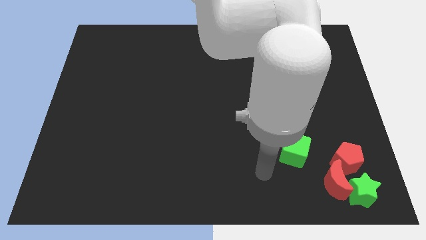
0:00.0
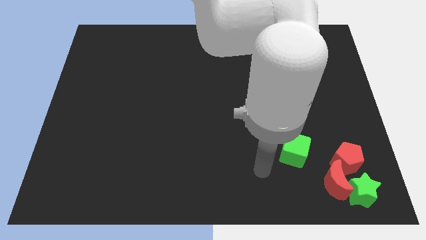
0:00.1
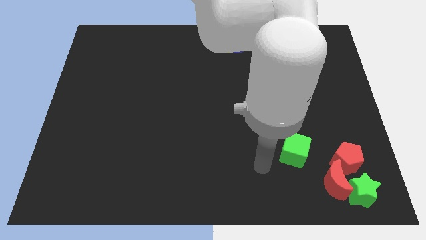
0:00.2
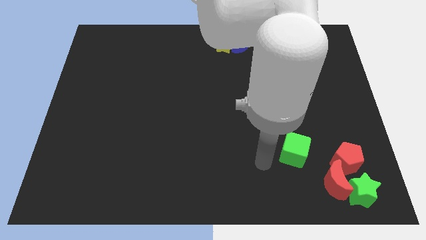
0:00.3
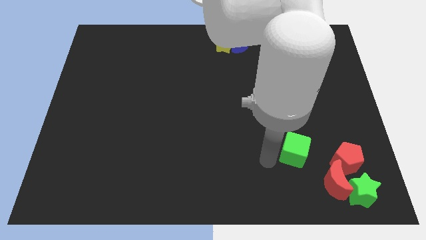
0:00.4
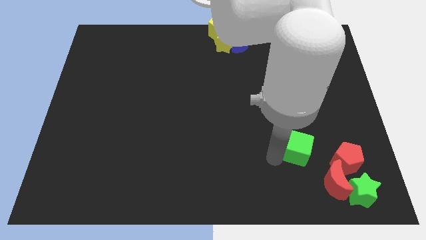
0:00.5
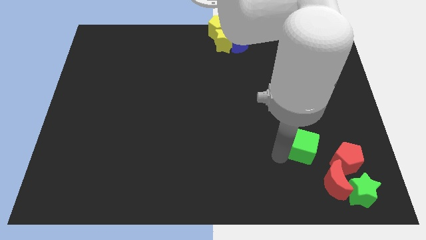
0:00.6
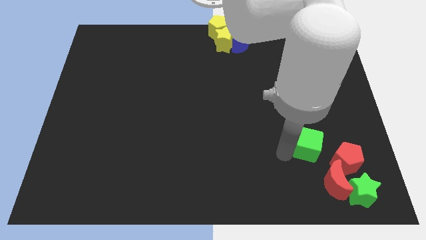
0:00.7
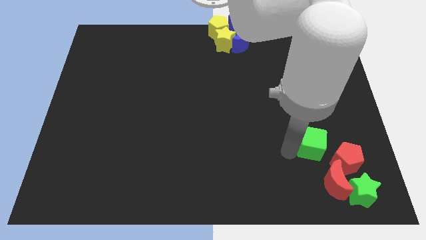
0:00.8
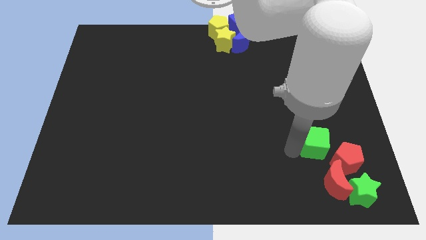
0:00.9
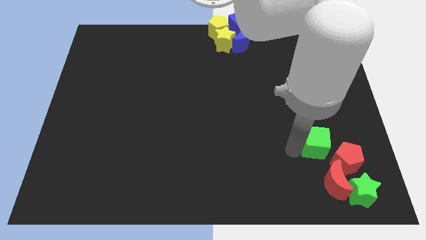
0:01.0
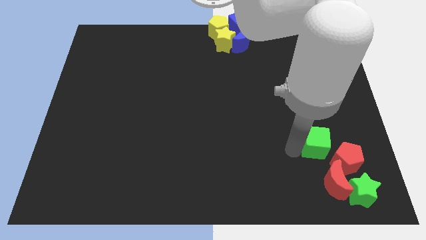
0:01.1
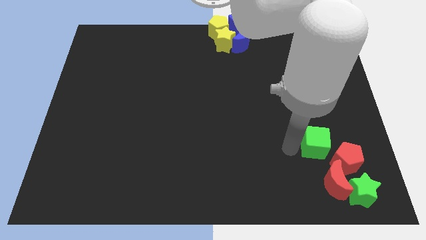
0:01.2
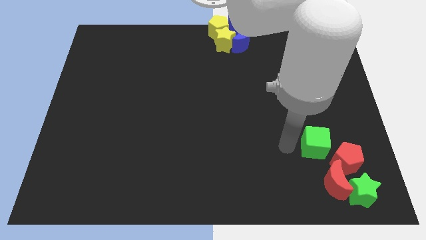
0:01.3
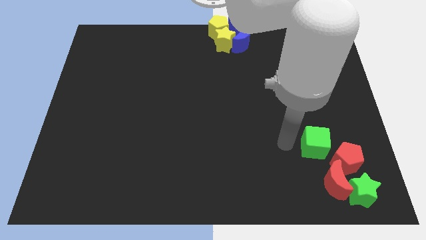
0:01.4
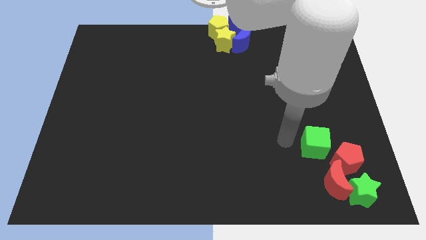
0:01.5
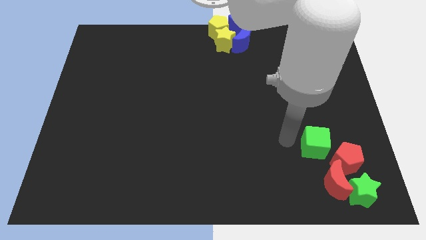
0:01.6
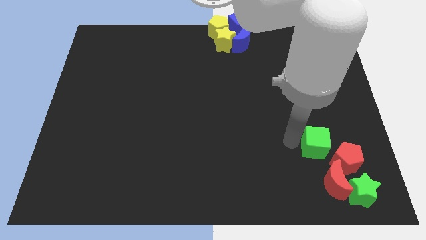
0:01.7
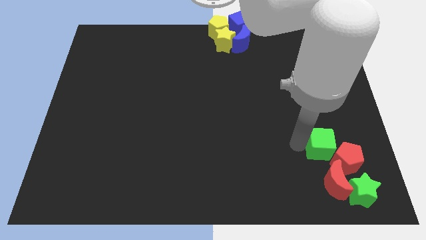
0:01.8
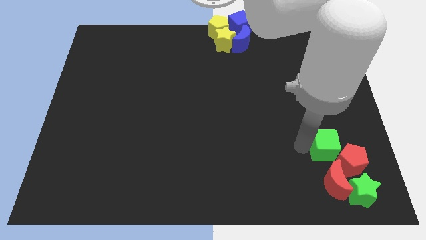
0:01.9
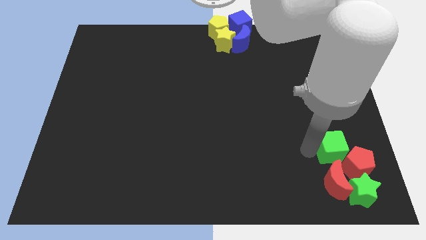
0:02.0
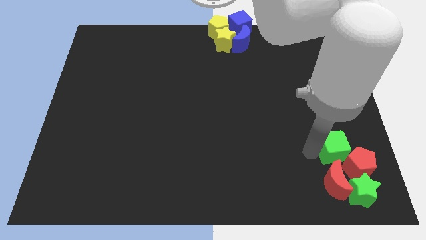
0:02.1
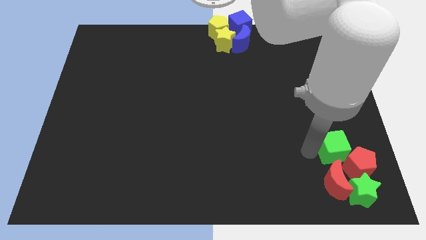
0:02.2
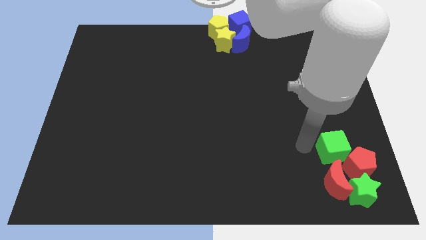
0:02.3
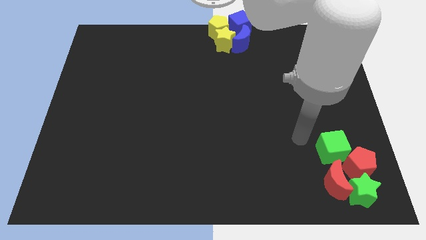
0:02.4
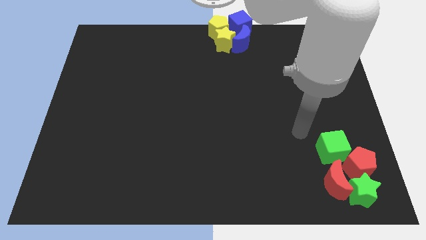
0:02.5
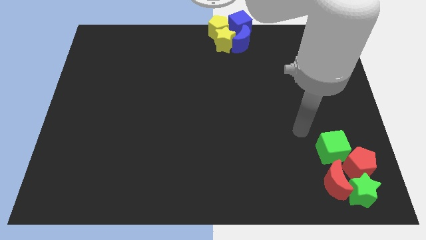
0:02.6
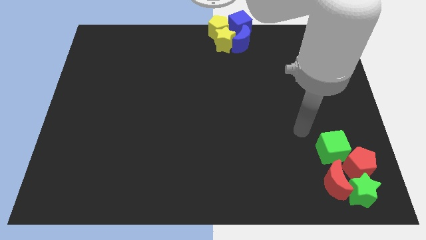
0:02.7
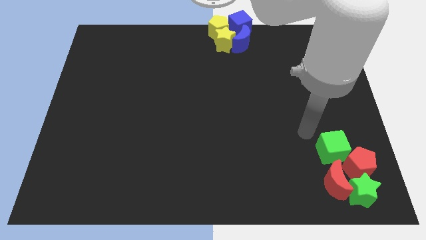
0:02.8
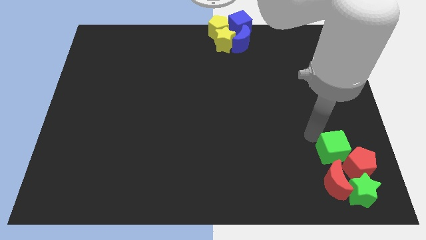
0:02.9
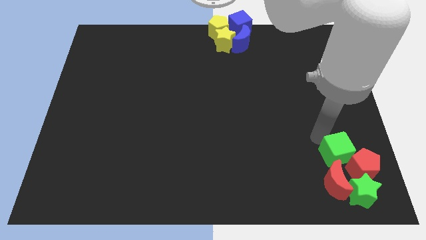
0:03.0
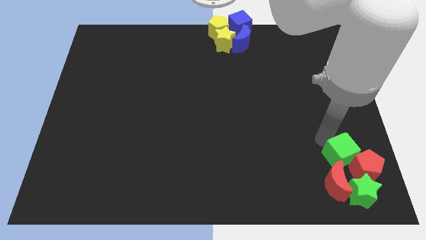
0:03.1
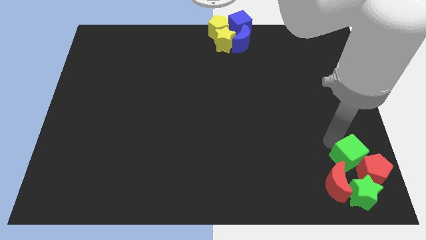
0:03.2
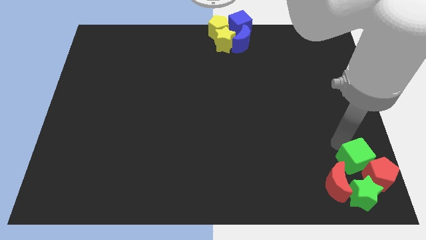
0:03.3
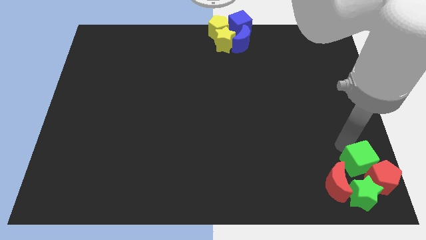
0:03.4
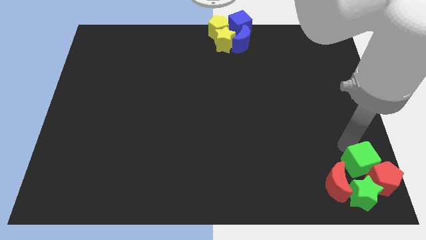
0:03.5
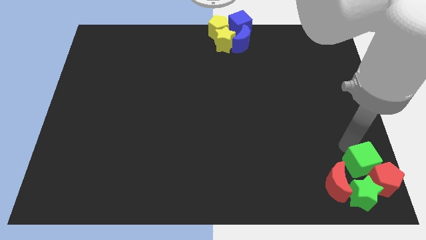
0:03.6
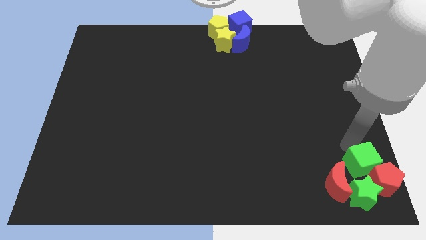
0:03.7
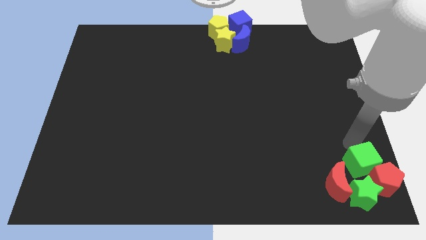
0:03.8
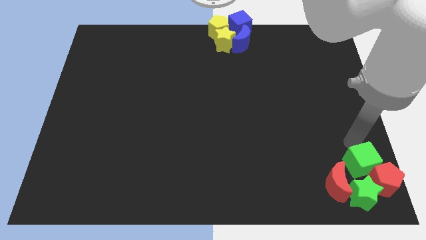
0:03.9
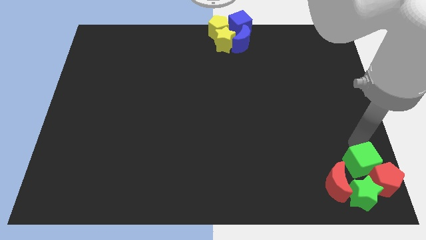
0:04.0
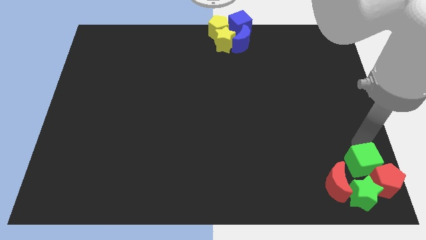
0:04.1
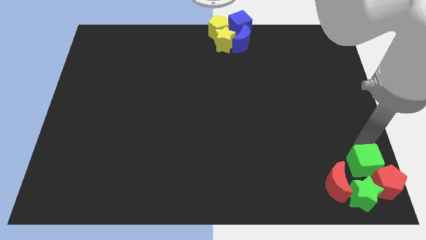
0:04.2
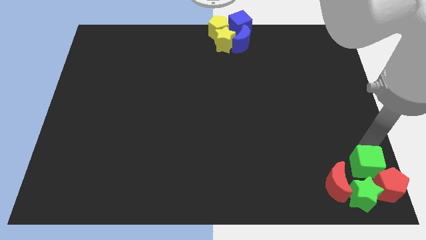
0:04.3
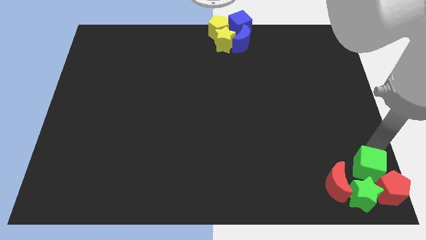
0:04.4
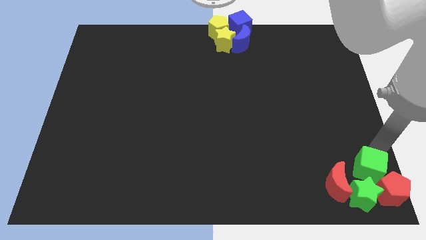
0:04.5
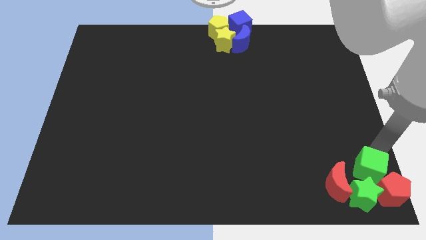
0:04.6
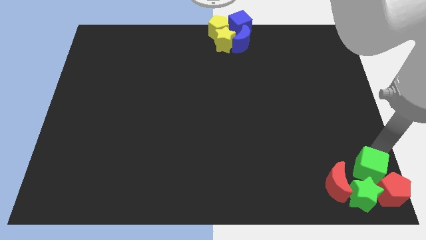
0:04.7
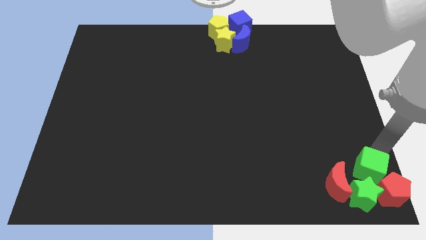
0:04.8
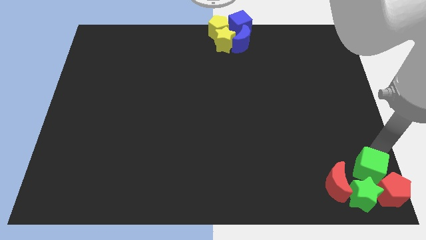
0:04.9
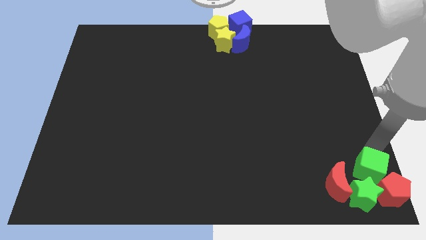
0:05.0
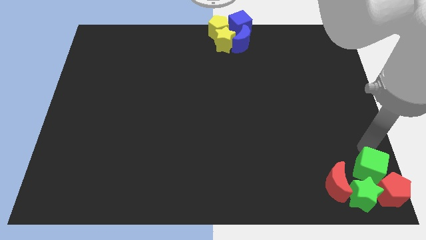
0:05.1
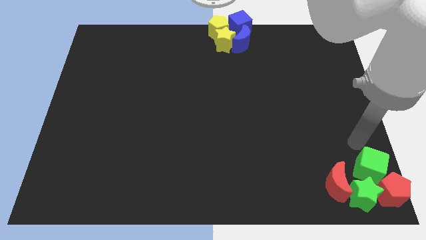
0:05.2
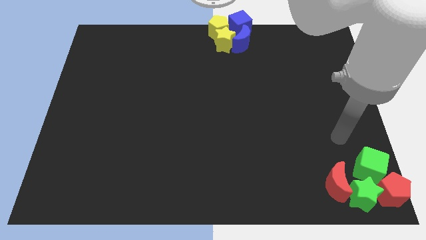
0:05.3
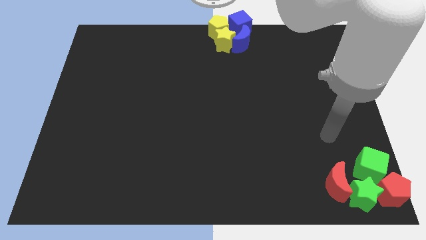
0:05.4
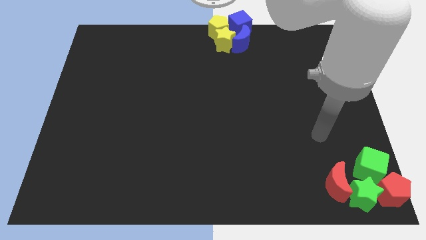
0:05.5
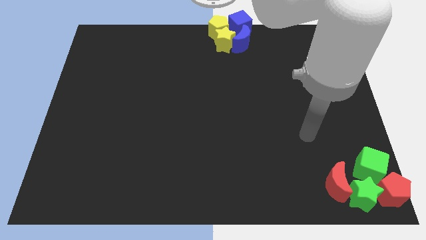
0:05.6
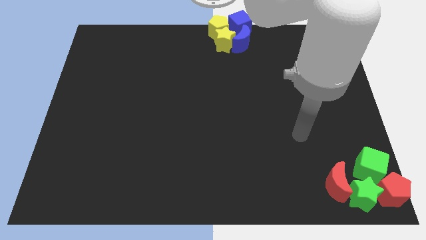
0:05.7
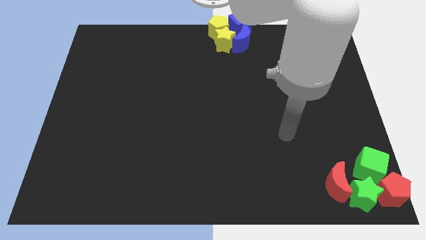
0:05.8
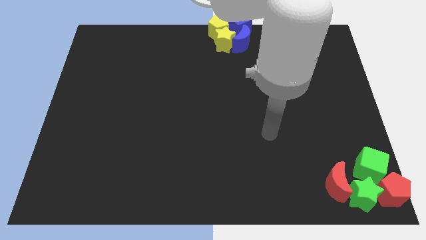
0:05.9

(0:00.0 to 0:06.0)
place the green cube above the green star

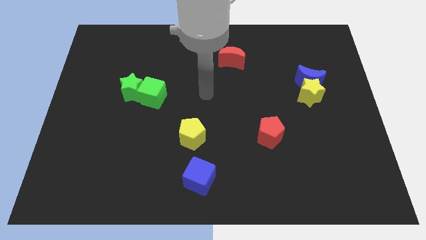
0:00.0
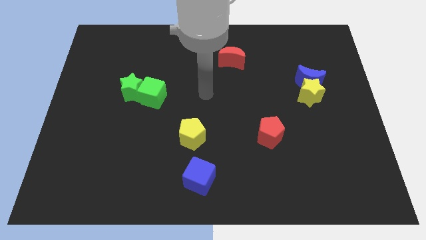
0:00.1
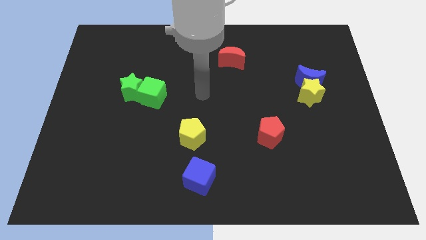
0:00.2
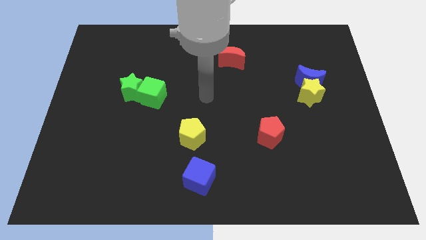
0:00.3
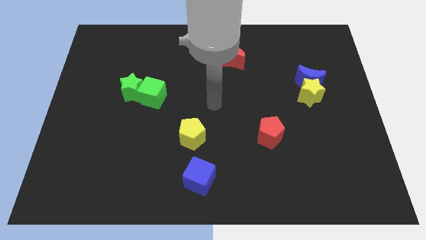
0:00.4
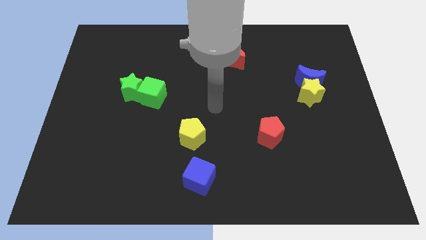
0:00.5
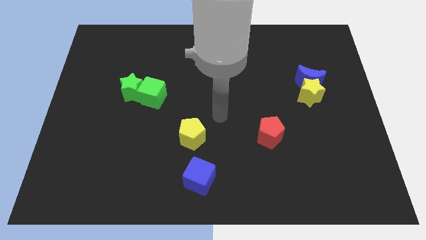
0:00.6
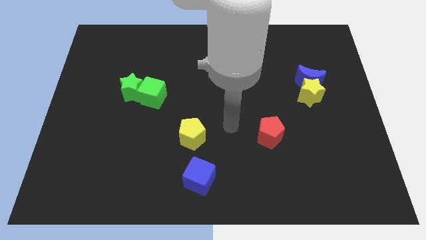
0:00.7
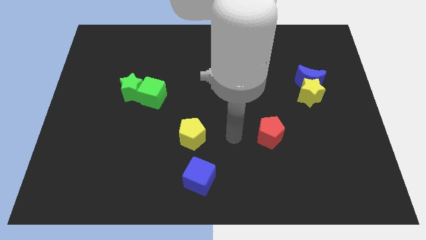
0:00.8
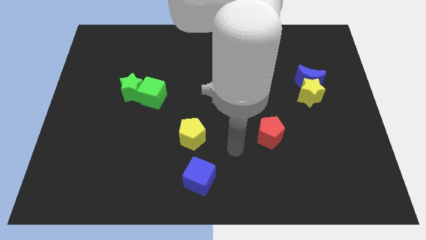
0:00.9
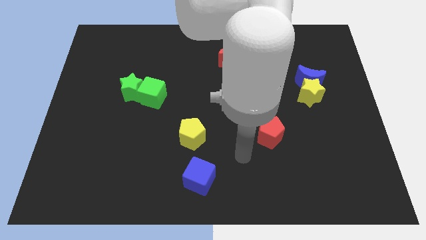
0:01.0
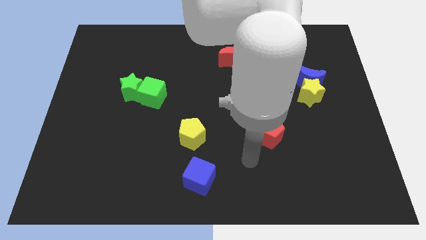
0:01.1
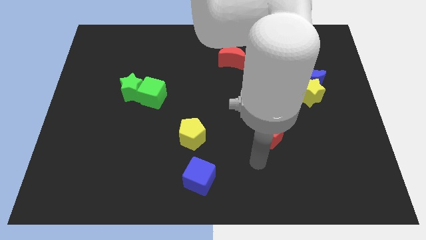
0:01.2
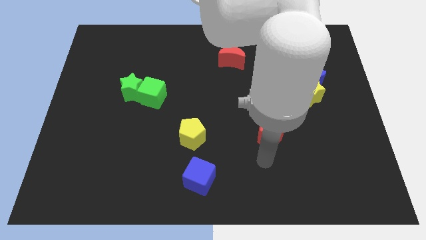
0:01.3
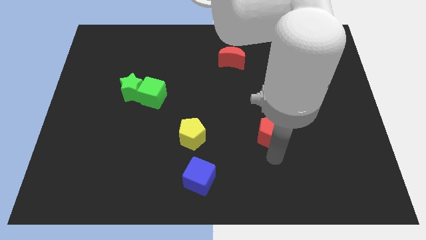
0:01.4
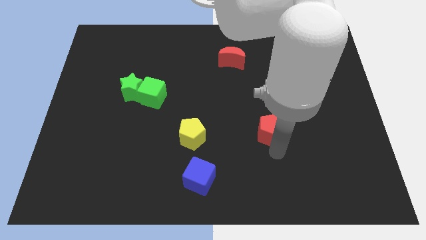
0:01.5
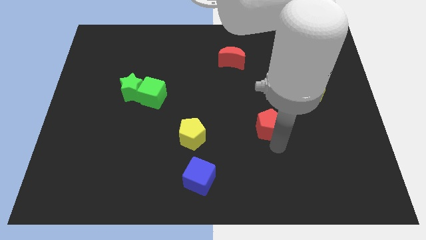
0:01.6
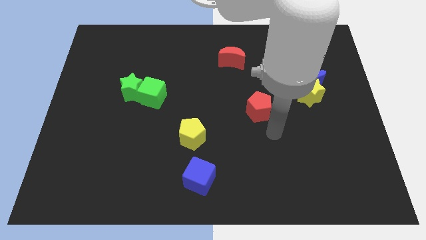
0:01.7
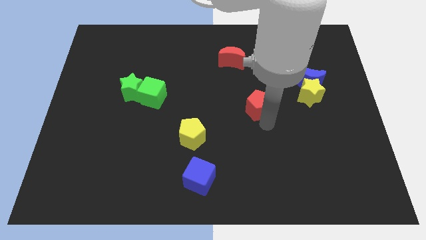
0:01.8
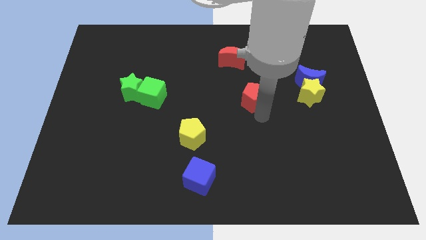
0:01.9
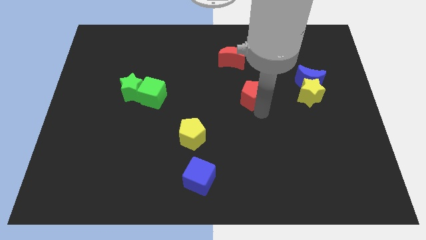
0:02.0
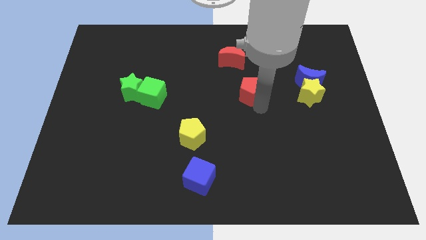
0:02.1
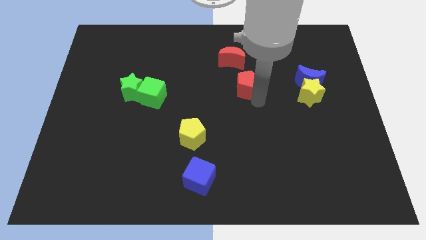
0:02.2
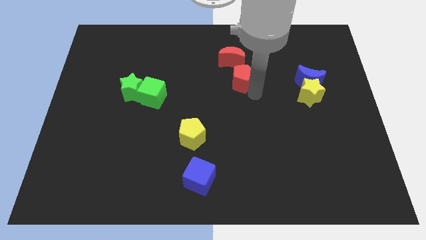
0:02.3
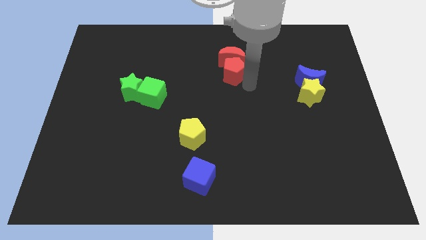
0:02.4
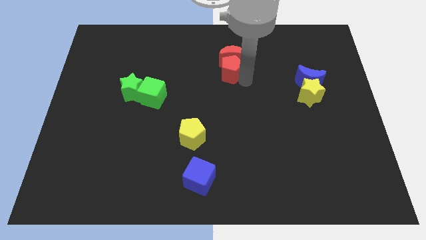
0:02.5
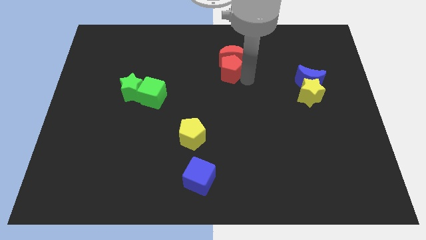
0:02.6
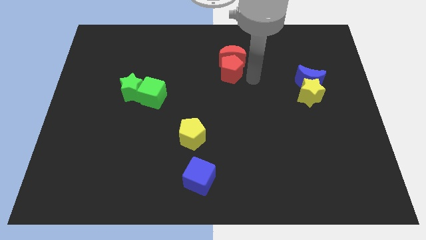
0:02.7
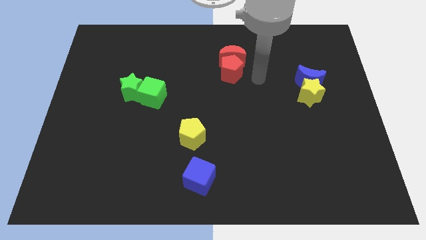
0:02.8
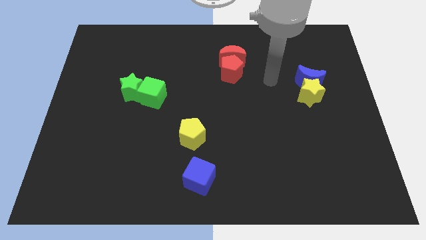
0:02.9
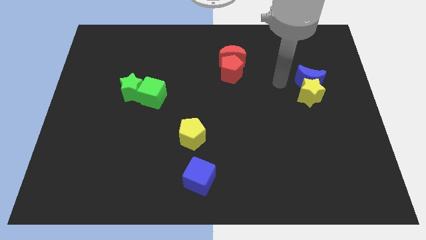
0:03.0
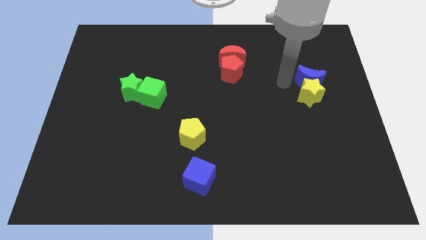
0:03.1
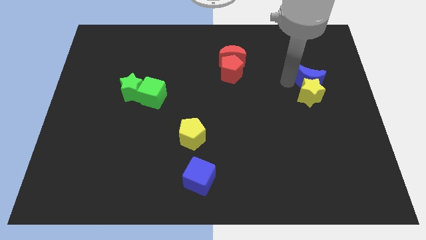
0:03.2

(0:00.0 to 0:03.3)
slide the red pentagon to the bottom side of the red crescent
